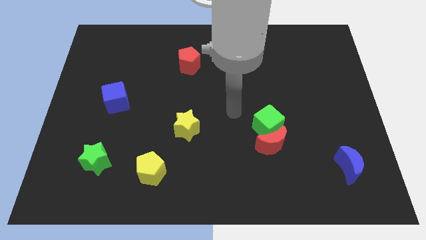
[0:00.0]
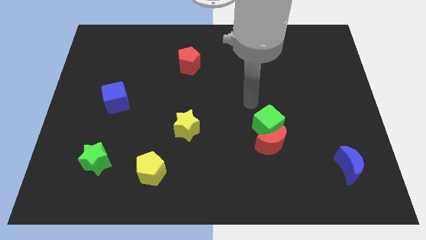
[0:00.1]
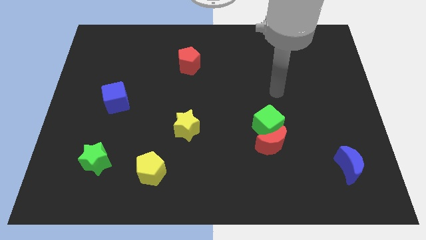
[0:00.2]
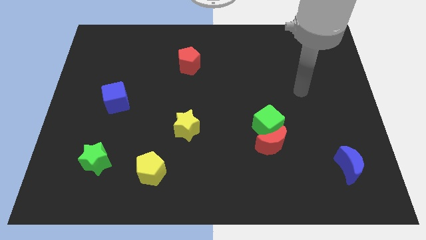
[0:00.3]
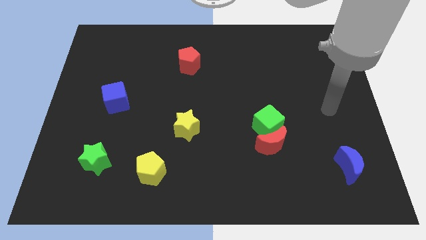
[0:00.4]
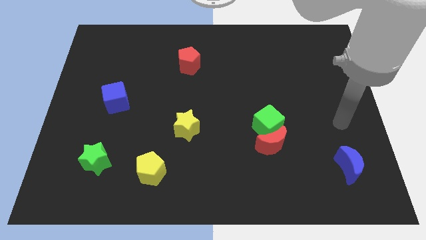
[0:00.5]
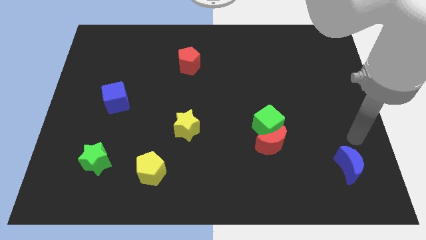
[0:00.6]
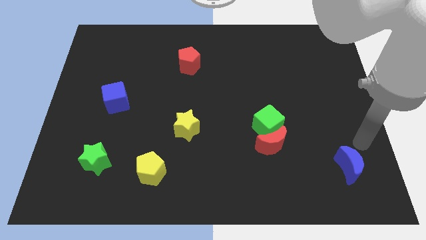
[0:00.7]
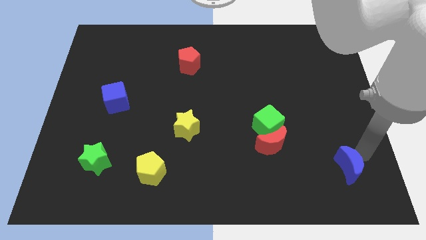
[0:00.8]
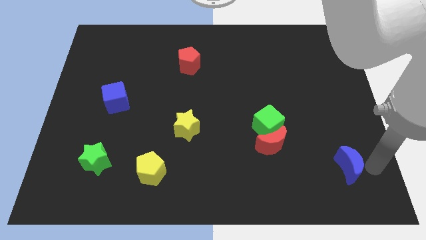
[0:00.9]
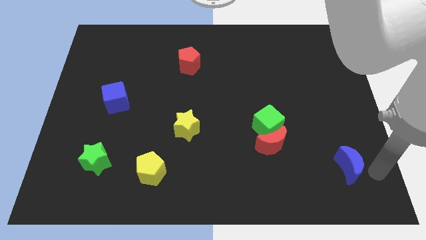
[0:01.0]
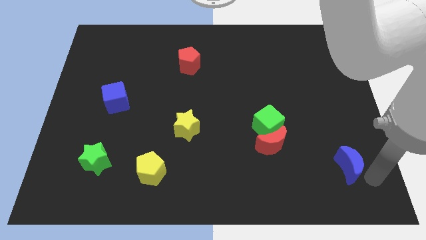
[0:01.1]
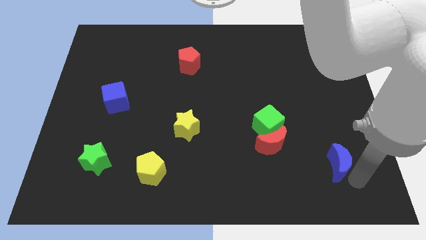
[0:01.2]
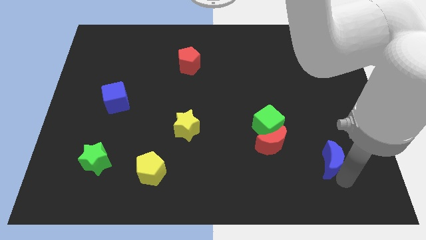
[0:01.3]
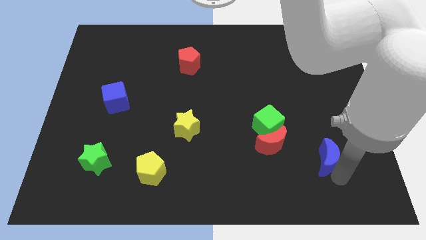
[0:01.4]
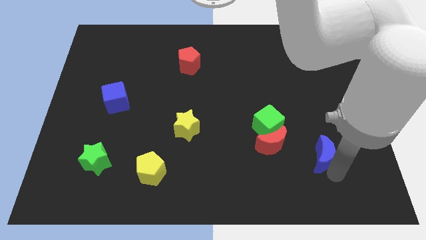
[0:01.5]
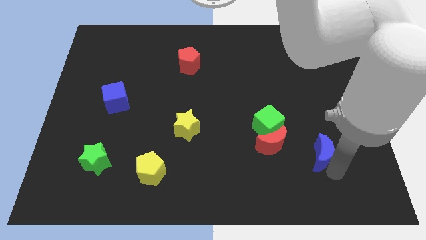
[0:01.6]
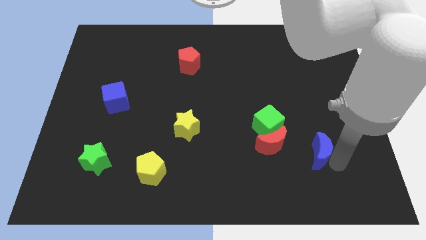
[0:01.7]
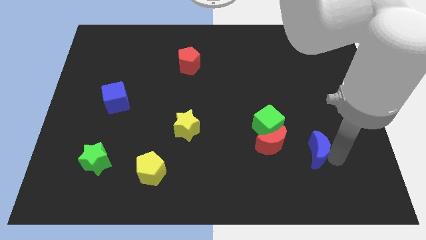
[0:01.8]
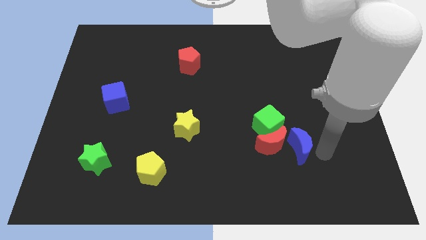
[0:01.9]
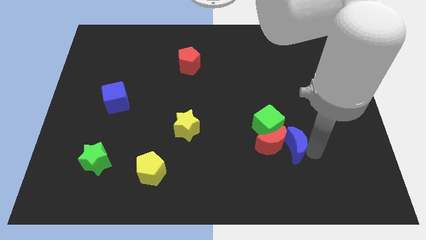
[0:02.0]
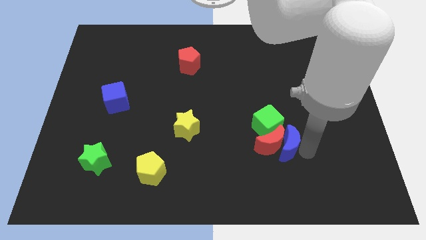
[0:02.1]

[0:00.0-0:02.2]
slide the blue moon close to the red moon

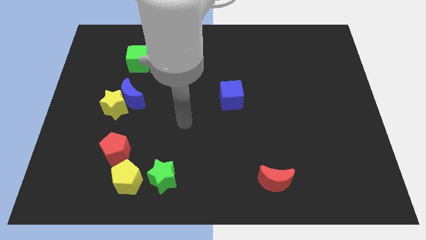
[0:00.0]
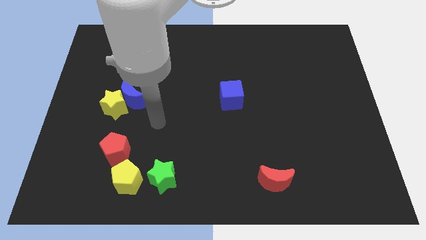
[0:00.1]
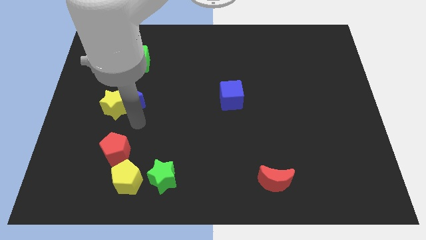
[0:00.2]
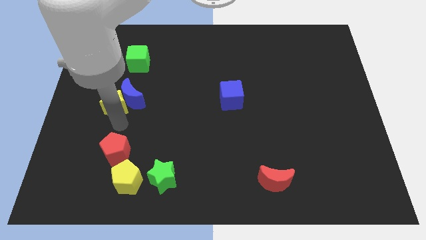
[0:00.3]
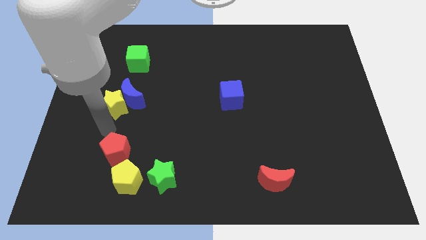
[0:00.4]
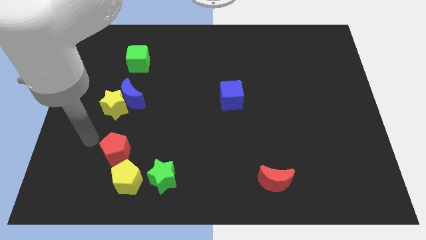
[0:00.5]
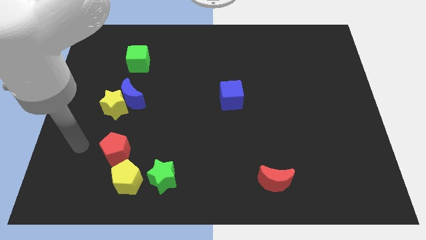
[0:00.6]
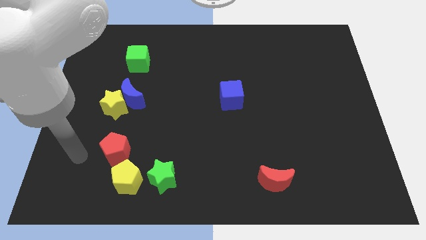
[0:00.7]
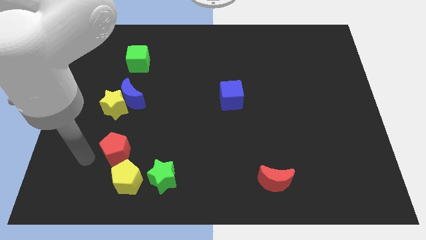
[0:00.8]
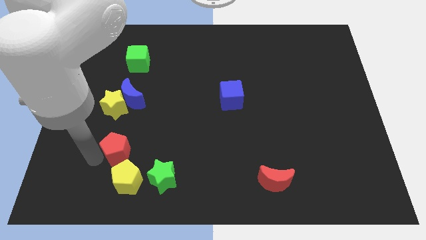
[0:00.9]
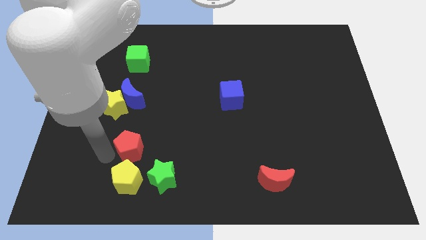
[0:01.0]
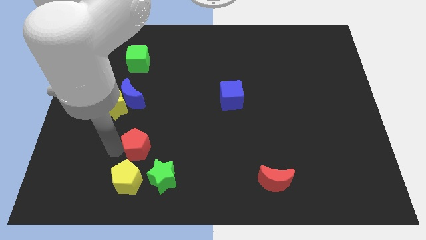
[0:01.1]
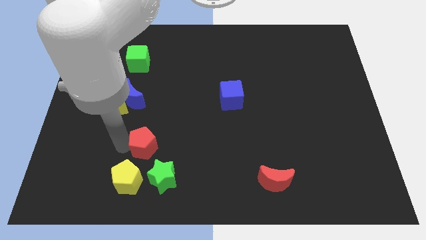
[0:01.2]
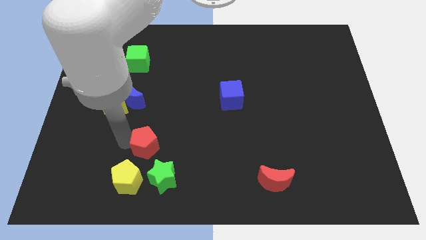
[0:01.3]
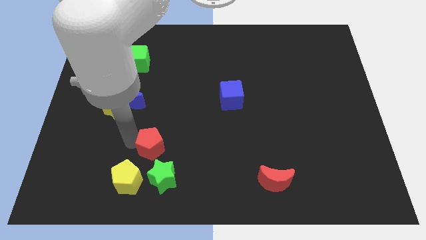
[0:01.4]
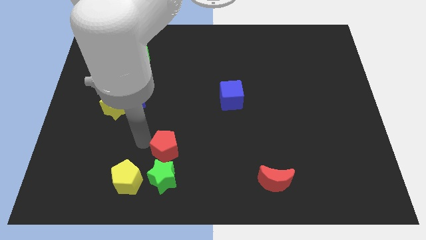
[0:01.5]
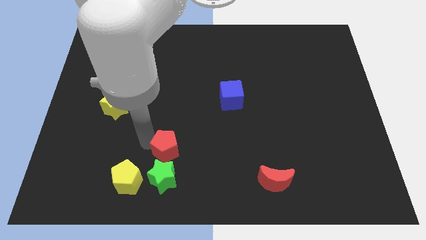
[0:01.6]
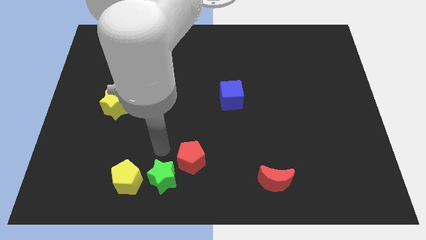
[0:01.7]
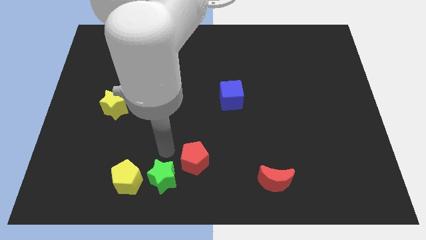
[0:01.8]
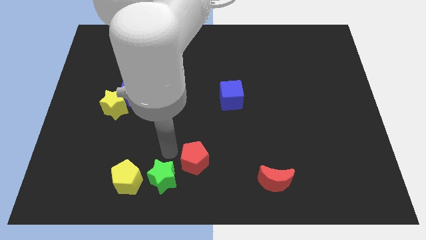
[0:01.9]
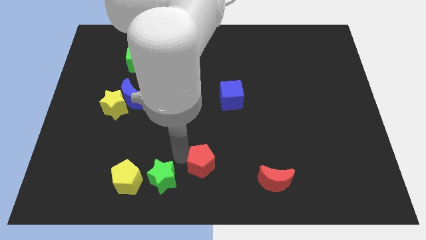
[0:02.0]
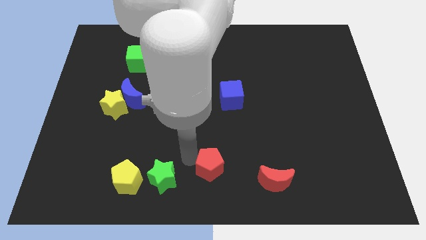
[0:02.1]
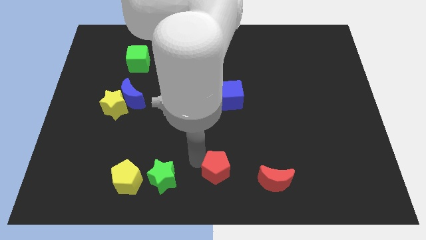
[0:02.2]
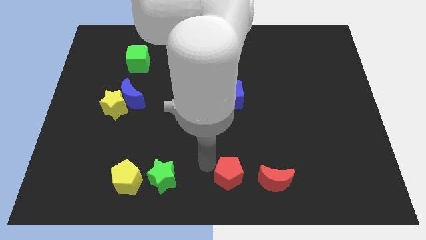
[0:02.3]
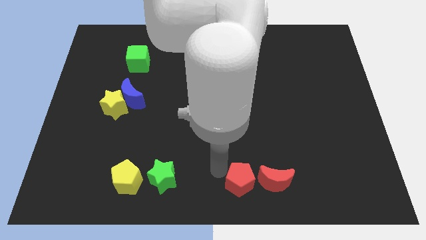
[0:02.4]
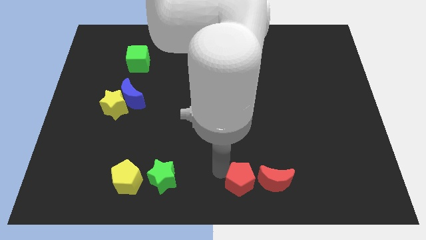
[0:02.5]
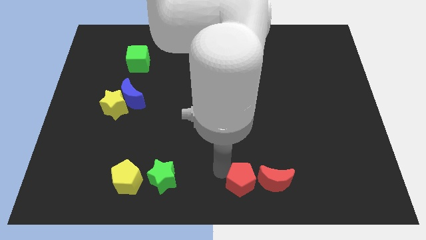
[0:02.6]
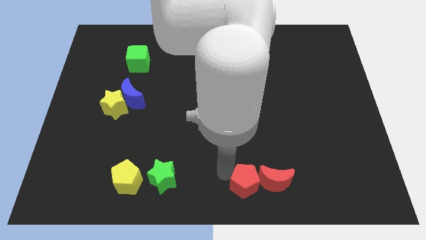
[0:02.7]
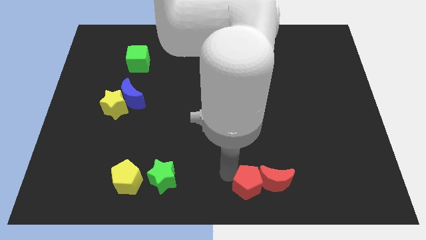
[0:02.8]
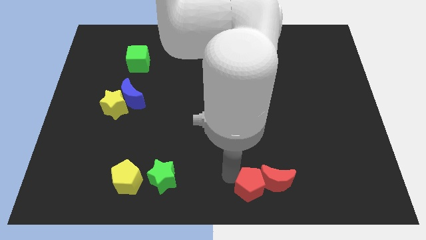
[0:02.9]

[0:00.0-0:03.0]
push the red pentagon next to the red moon

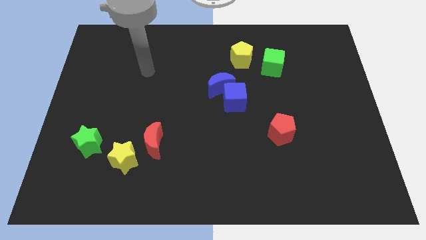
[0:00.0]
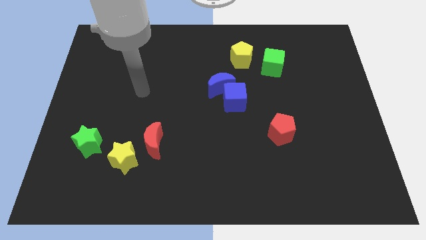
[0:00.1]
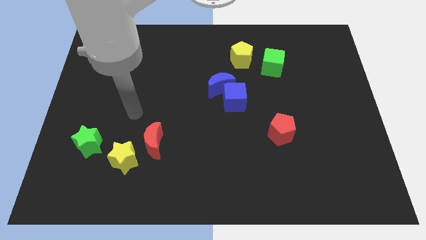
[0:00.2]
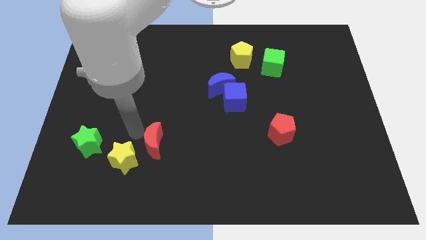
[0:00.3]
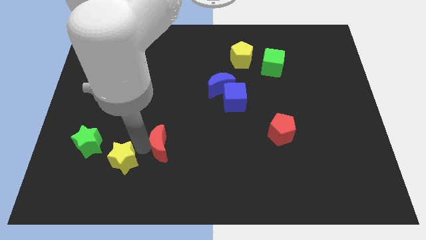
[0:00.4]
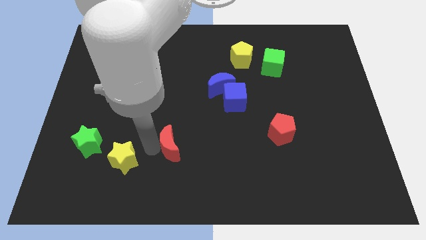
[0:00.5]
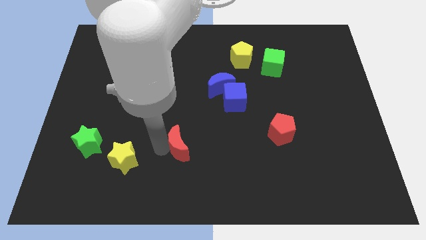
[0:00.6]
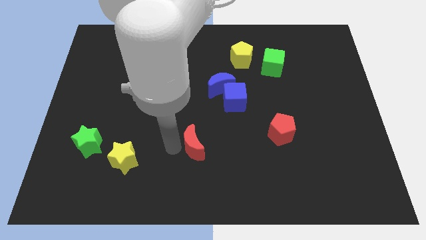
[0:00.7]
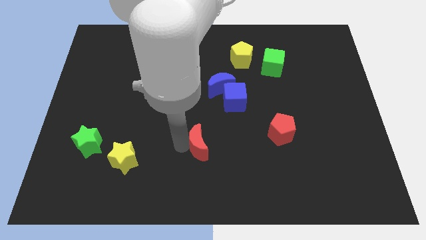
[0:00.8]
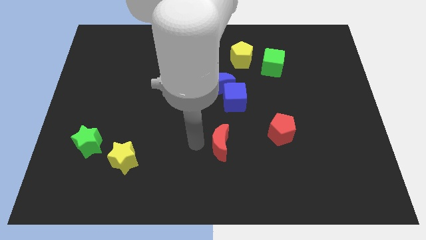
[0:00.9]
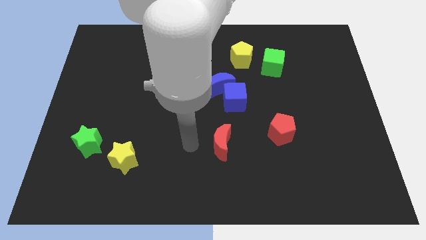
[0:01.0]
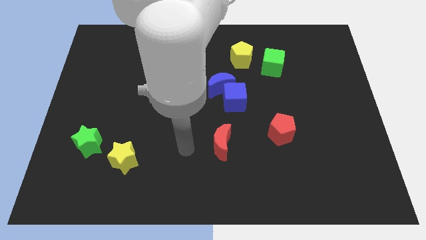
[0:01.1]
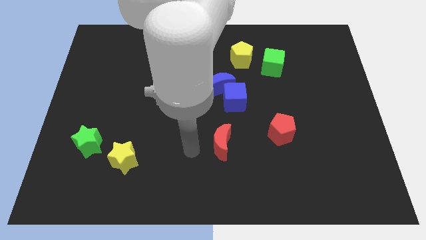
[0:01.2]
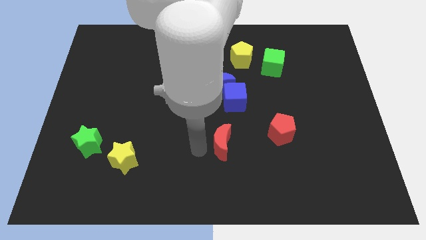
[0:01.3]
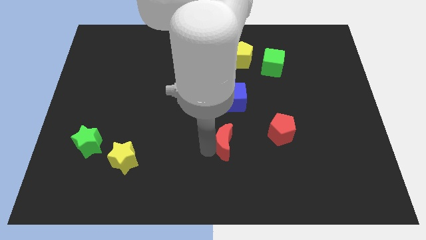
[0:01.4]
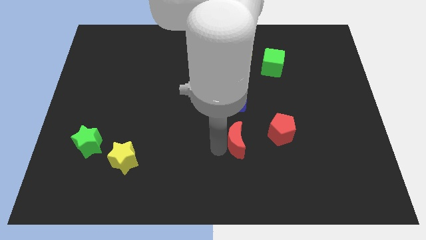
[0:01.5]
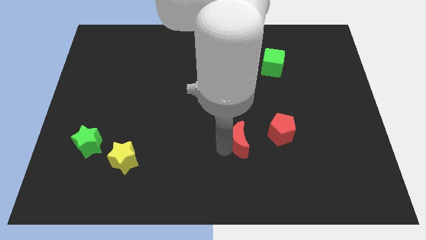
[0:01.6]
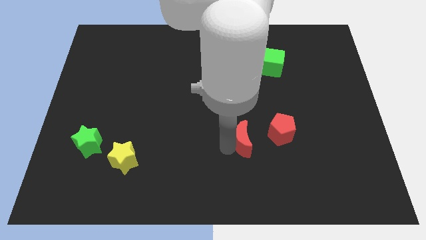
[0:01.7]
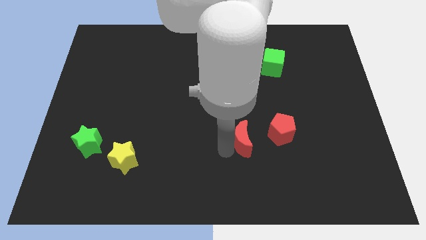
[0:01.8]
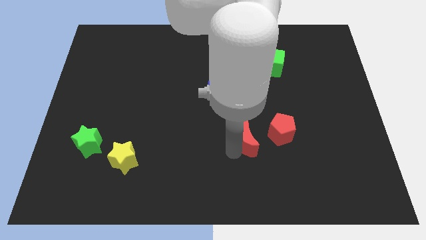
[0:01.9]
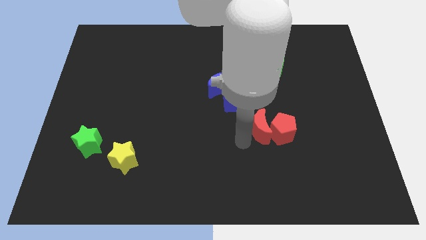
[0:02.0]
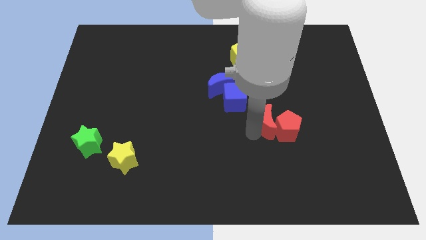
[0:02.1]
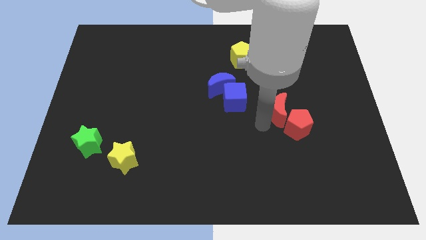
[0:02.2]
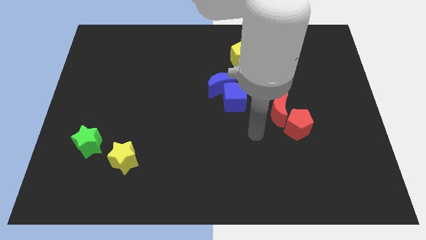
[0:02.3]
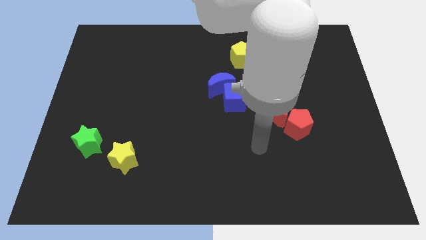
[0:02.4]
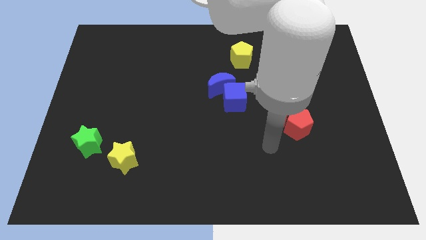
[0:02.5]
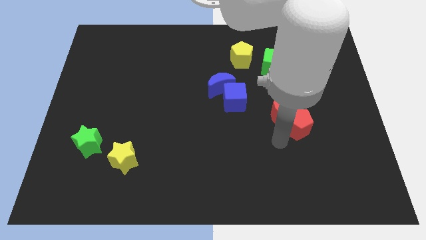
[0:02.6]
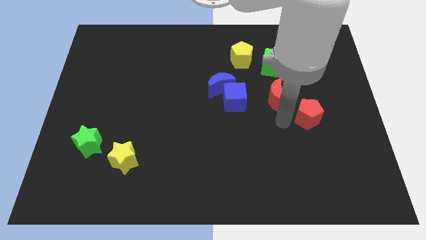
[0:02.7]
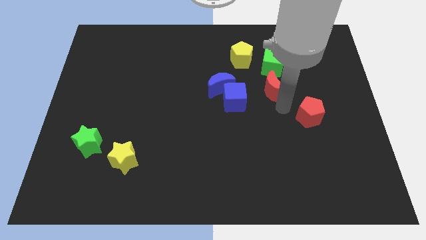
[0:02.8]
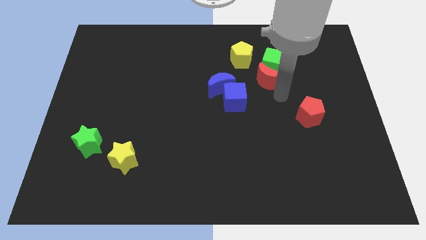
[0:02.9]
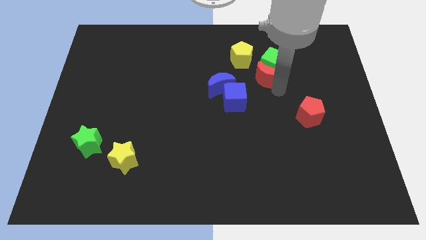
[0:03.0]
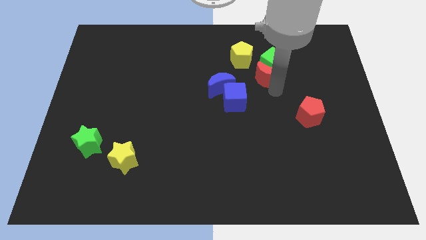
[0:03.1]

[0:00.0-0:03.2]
push the red moon next to the green cube
